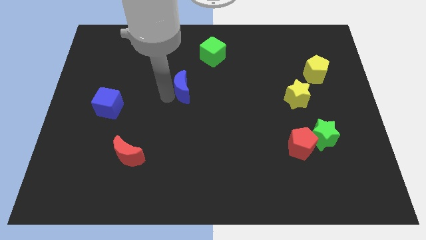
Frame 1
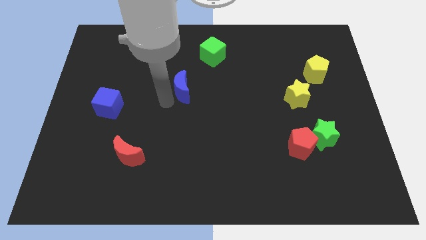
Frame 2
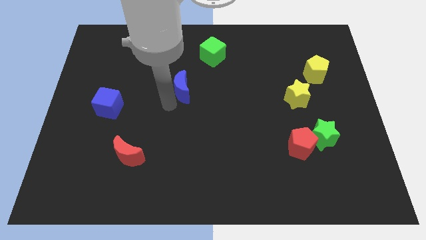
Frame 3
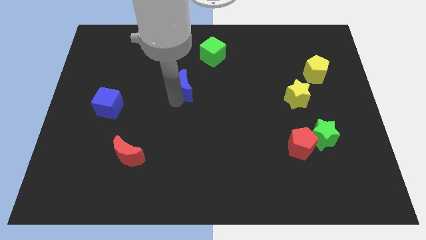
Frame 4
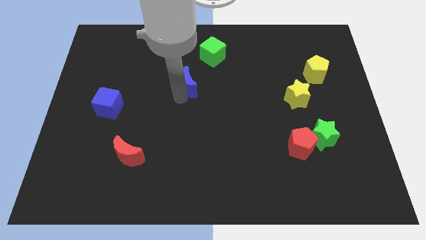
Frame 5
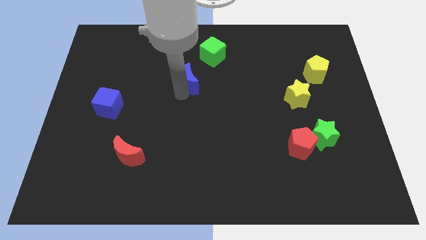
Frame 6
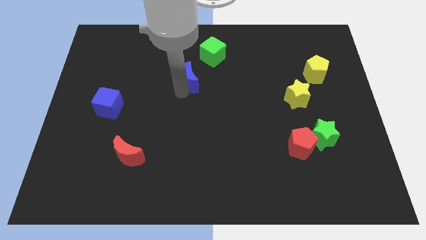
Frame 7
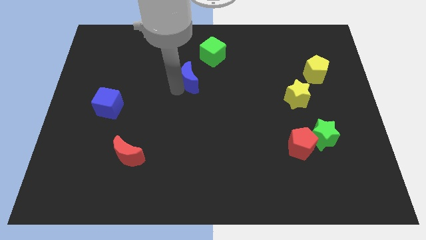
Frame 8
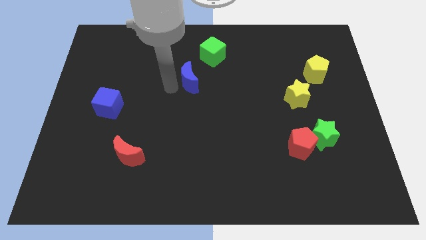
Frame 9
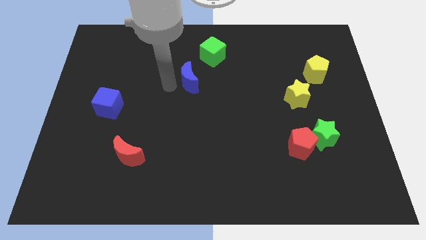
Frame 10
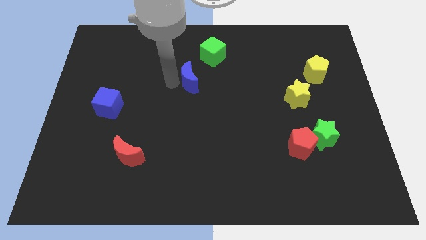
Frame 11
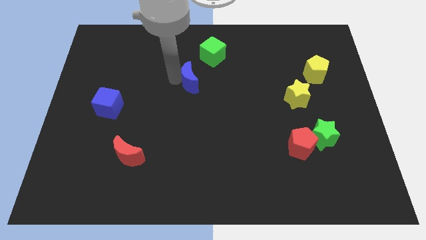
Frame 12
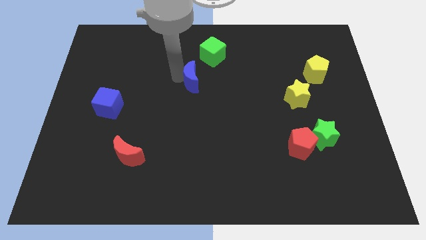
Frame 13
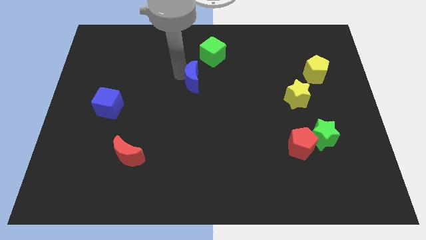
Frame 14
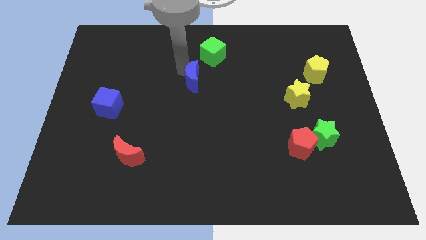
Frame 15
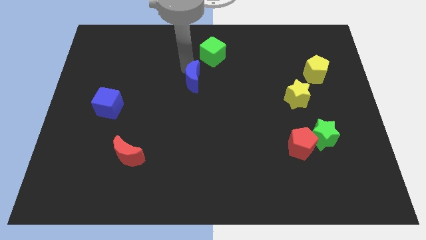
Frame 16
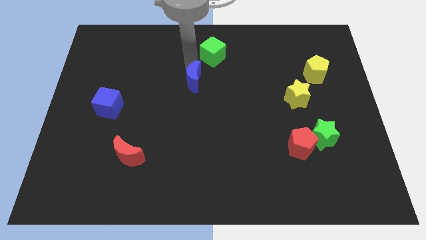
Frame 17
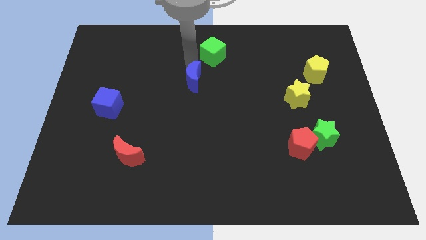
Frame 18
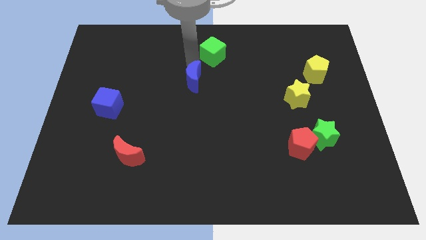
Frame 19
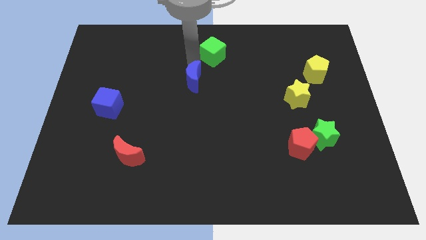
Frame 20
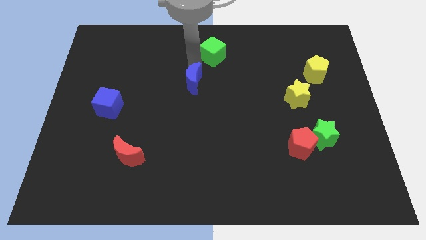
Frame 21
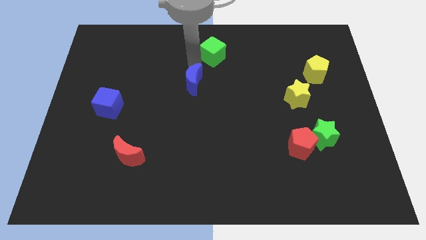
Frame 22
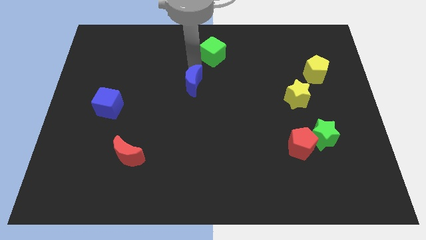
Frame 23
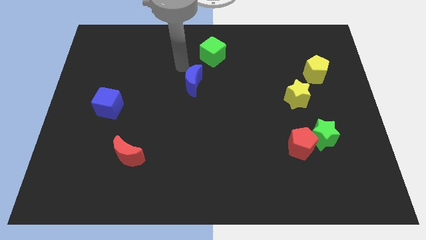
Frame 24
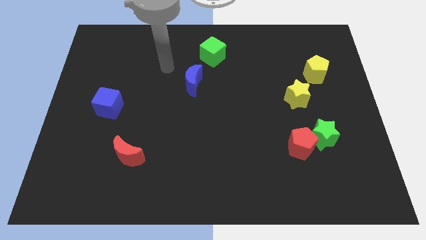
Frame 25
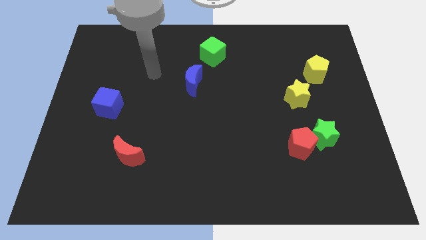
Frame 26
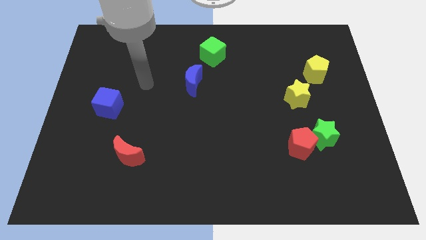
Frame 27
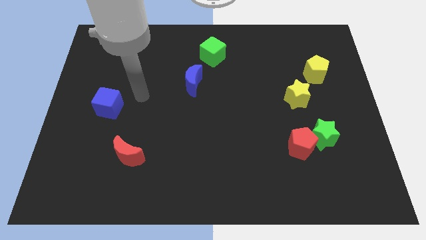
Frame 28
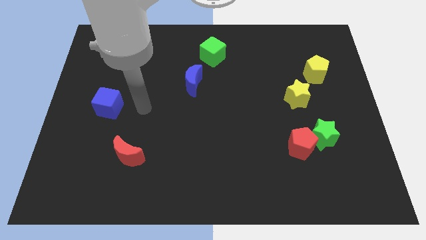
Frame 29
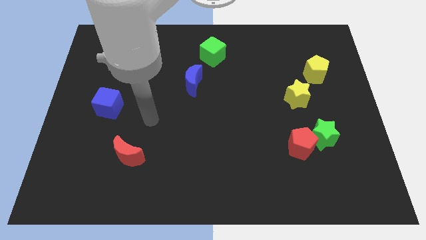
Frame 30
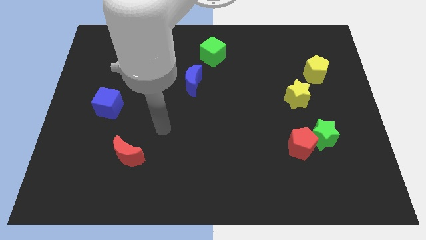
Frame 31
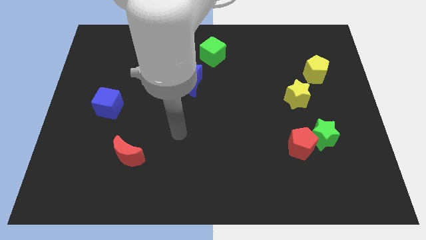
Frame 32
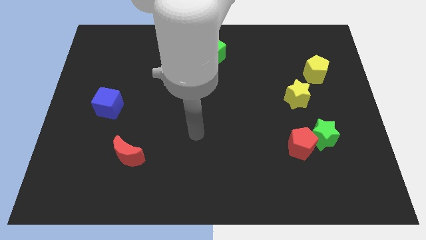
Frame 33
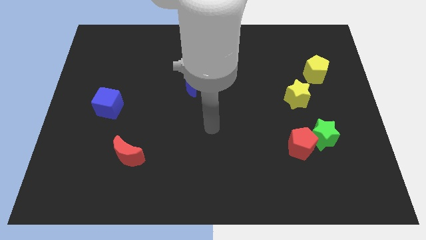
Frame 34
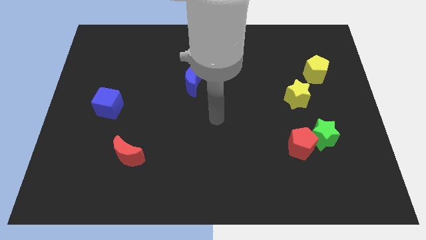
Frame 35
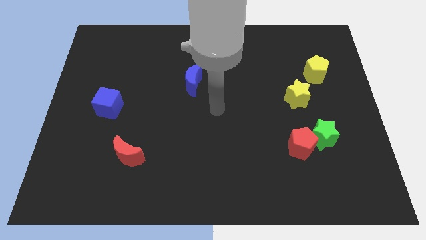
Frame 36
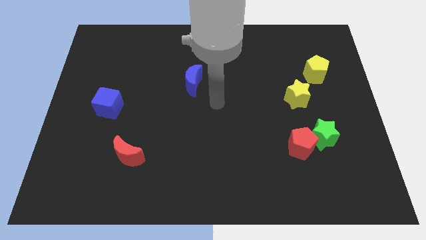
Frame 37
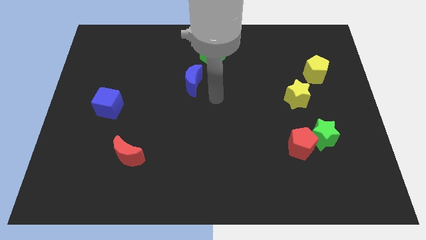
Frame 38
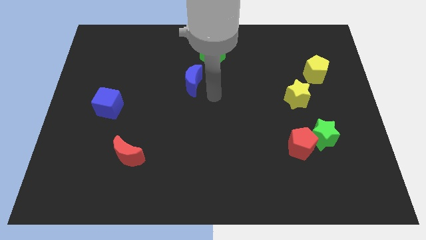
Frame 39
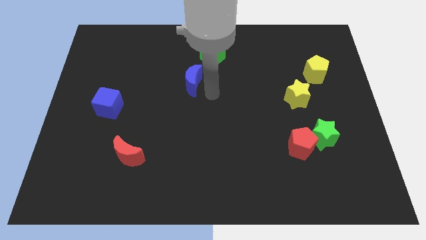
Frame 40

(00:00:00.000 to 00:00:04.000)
move the blue moon slightly up

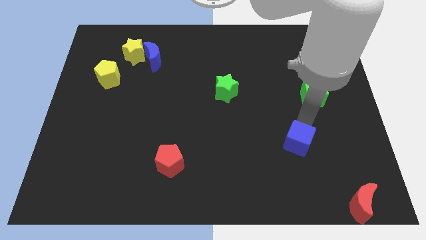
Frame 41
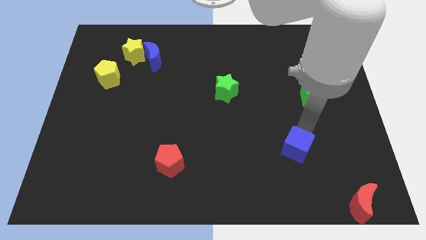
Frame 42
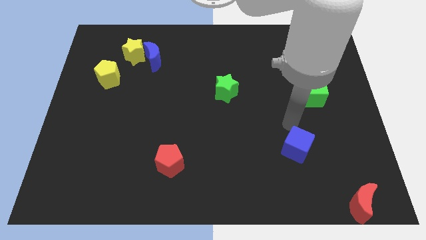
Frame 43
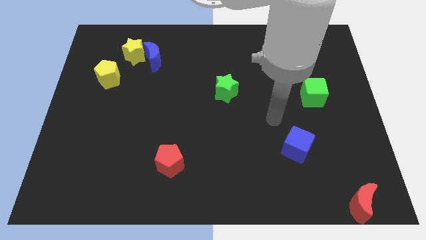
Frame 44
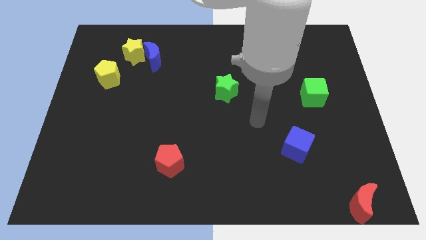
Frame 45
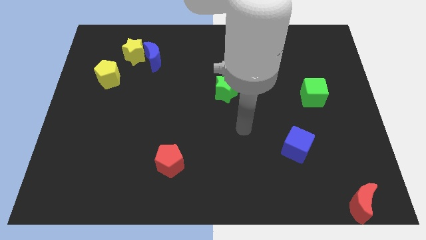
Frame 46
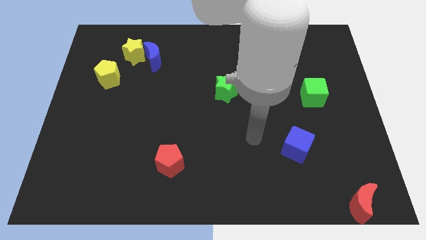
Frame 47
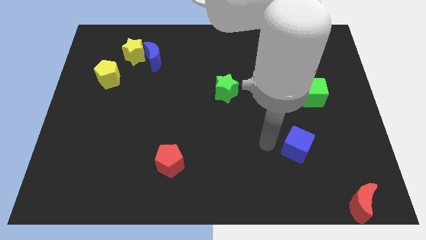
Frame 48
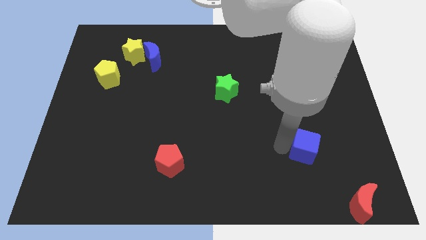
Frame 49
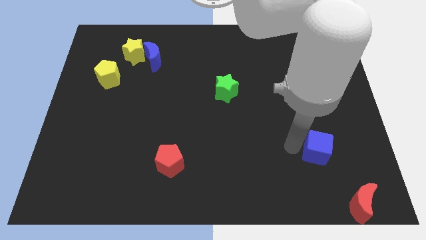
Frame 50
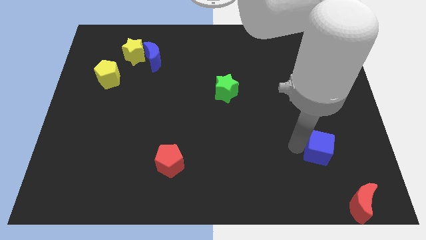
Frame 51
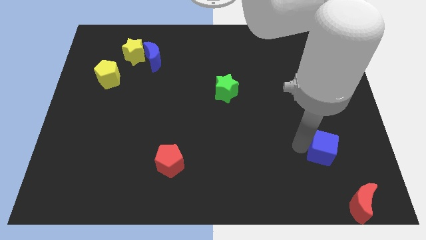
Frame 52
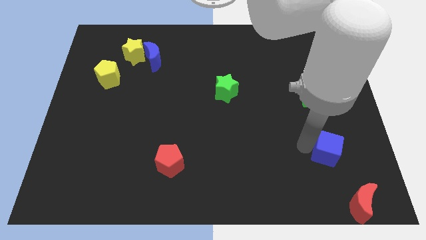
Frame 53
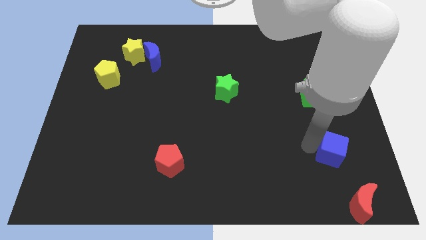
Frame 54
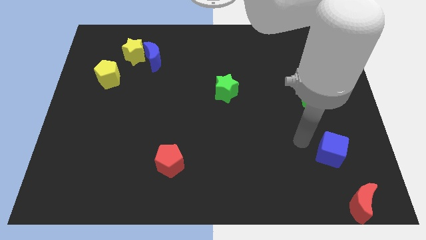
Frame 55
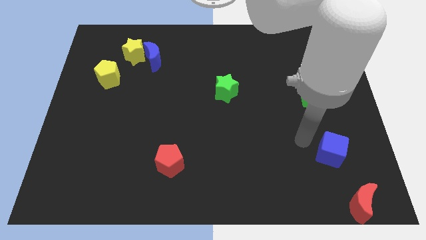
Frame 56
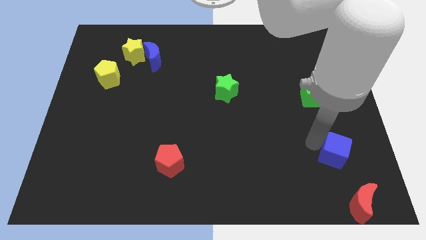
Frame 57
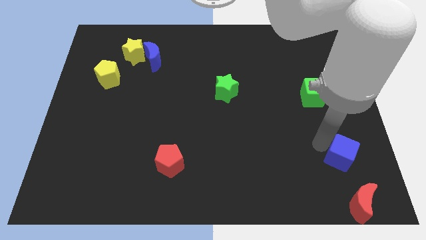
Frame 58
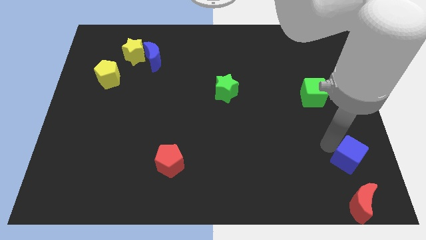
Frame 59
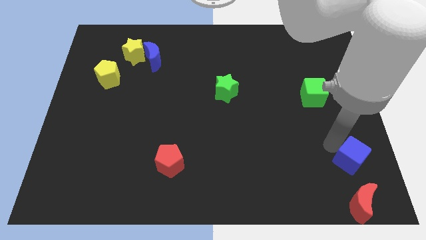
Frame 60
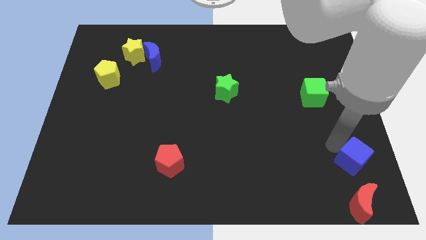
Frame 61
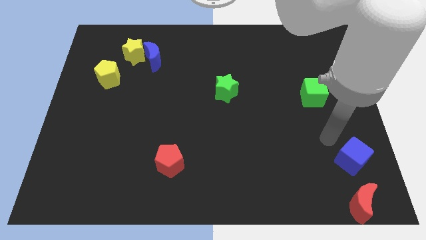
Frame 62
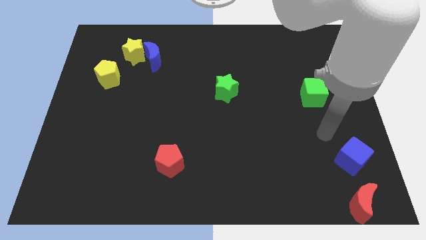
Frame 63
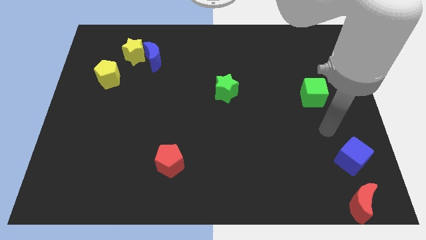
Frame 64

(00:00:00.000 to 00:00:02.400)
put the blue cube above the red crescent

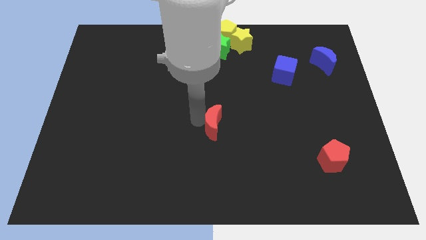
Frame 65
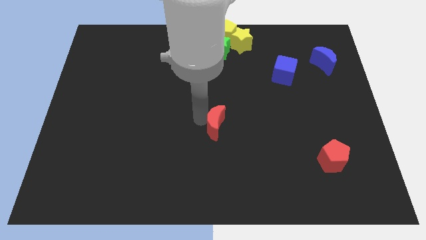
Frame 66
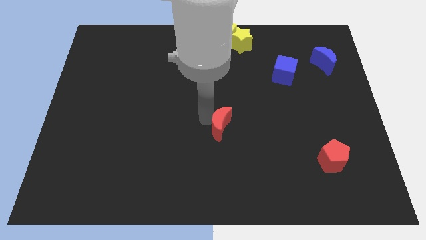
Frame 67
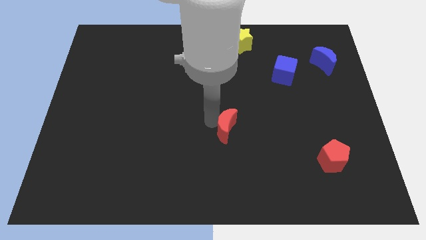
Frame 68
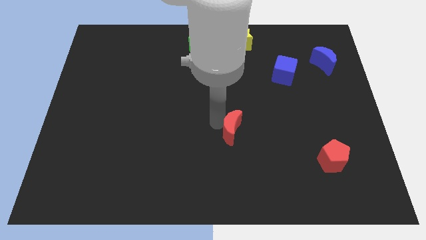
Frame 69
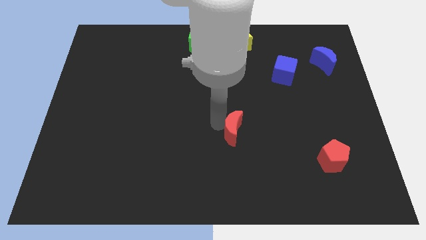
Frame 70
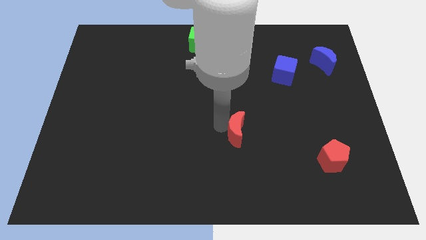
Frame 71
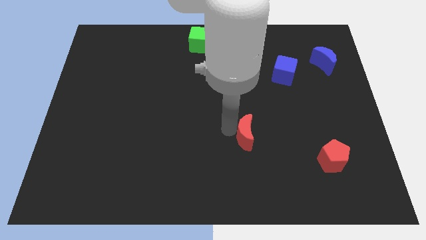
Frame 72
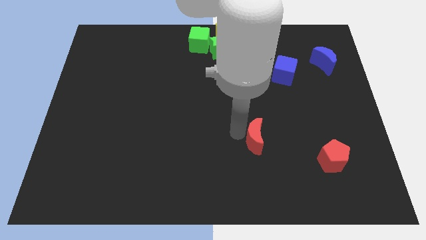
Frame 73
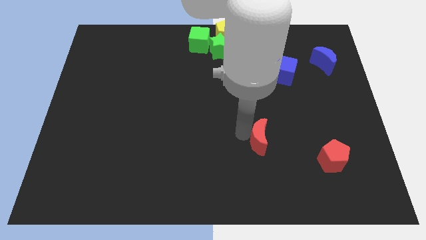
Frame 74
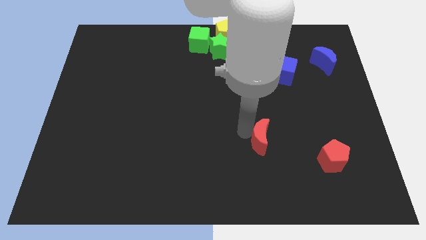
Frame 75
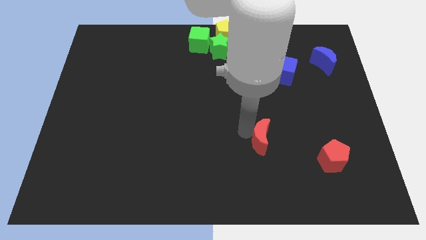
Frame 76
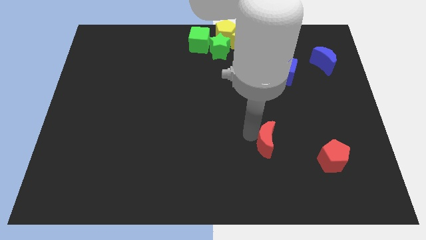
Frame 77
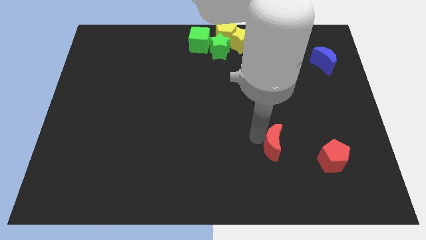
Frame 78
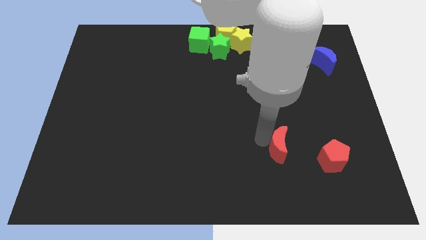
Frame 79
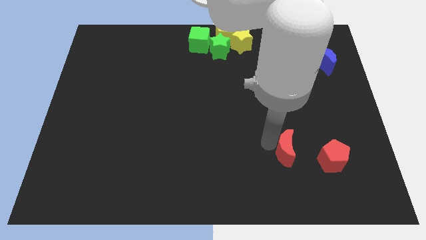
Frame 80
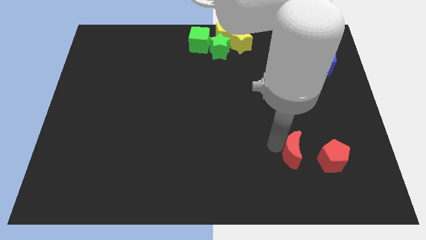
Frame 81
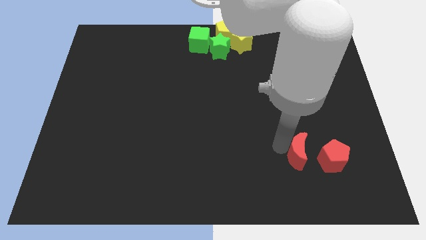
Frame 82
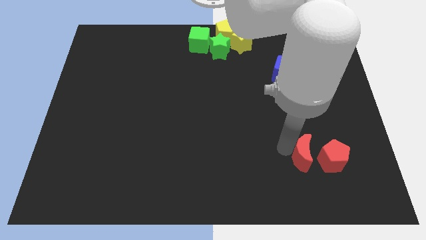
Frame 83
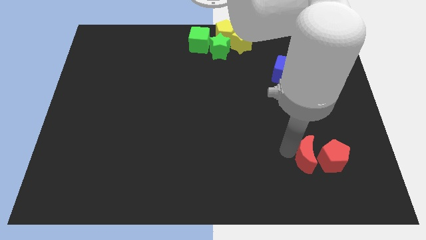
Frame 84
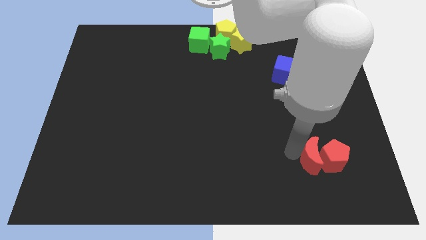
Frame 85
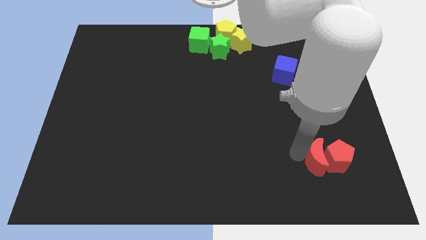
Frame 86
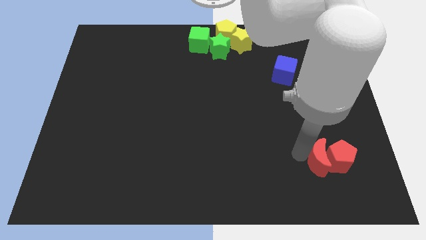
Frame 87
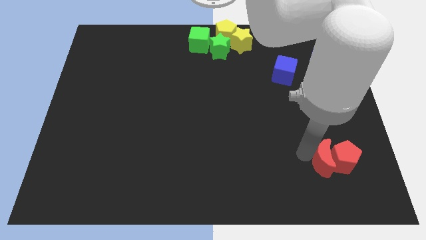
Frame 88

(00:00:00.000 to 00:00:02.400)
push the red moon into the red pentagon
